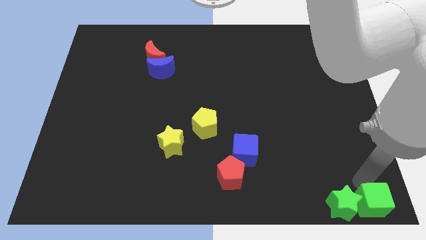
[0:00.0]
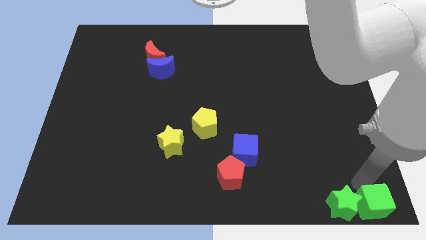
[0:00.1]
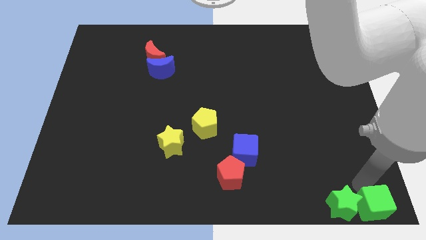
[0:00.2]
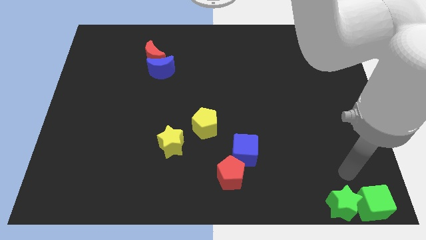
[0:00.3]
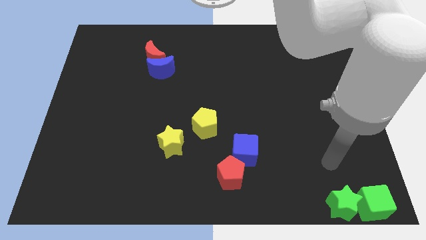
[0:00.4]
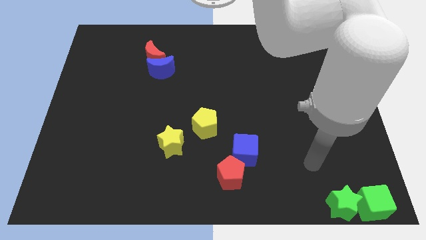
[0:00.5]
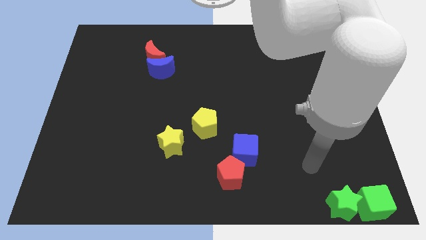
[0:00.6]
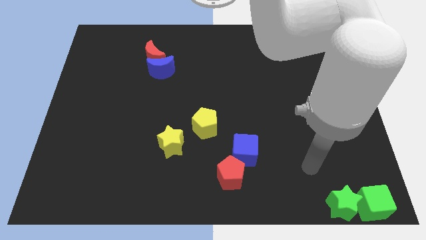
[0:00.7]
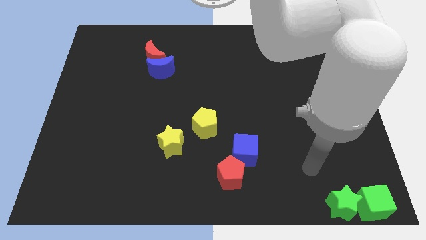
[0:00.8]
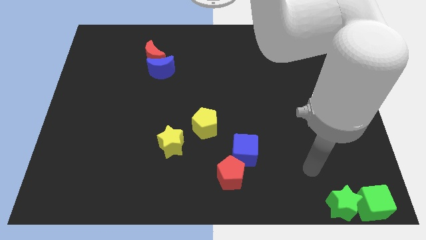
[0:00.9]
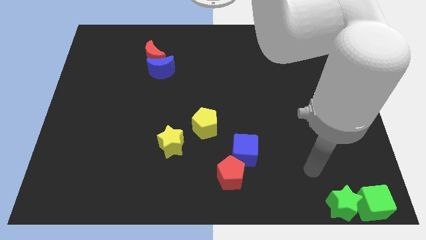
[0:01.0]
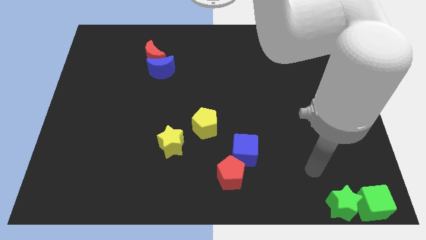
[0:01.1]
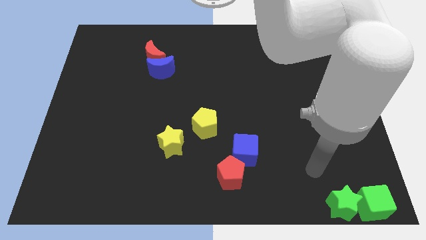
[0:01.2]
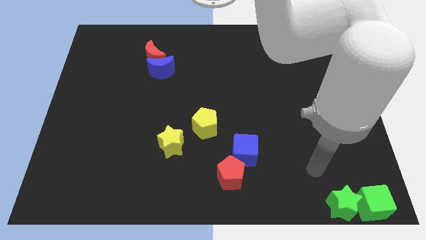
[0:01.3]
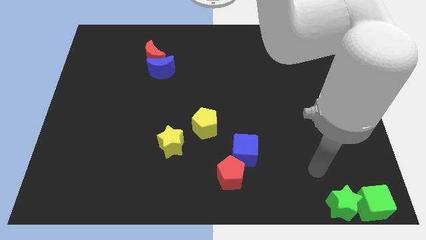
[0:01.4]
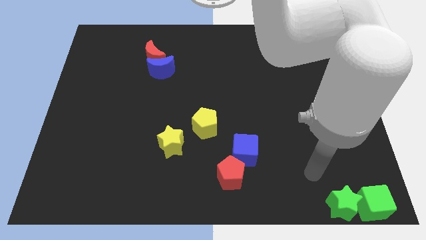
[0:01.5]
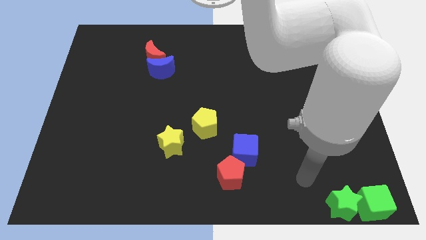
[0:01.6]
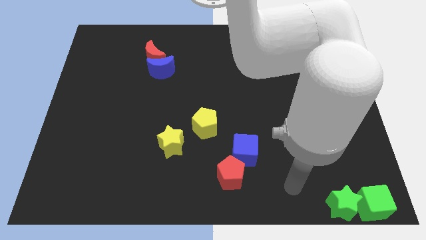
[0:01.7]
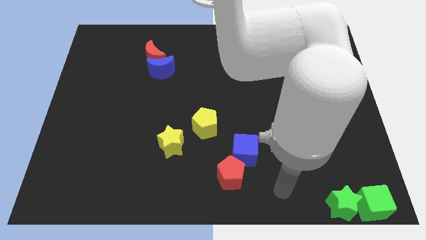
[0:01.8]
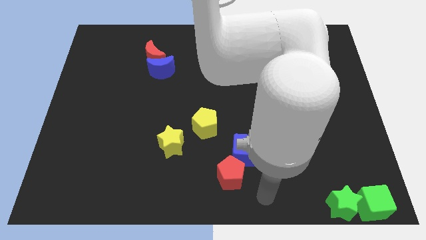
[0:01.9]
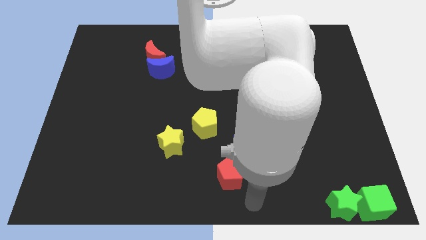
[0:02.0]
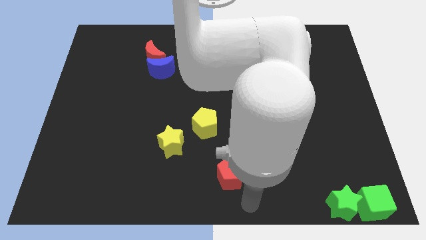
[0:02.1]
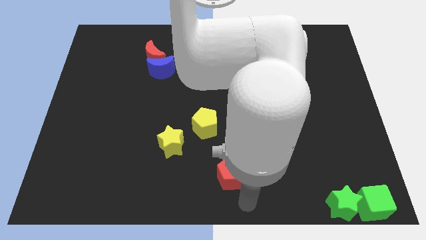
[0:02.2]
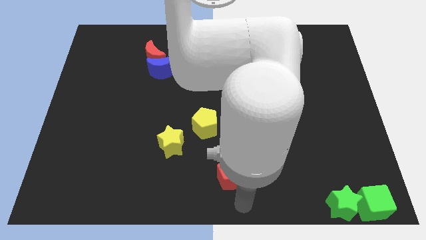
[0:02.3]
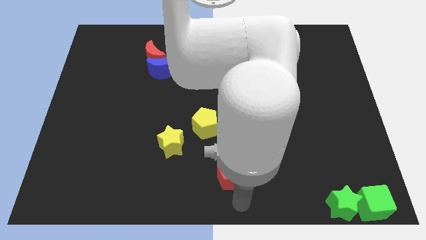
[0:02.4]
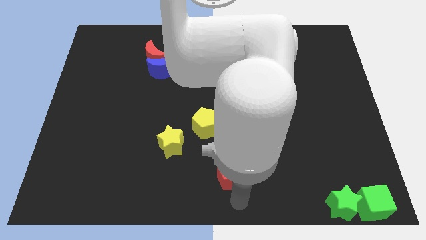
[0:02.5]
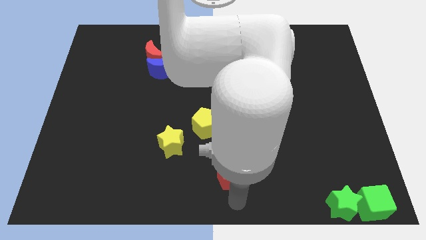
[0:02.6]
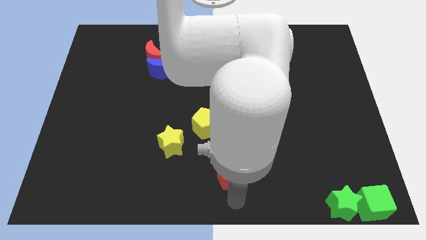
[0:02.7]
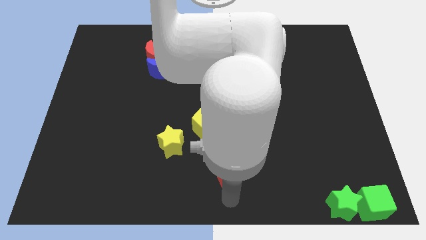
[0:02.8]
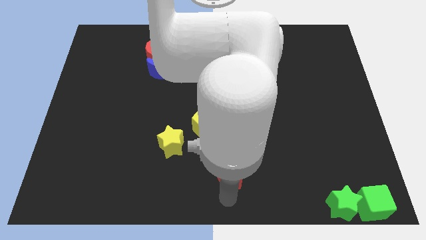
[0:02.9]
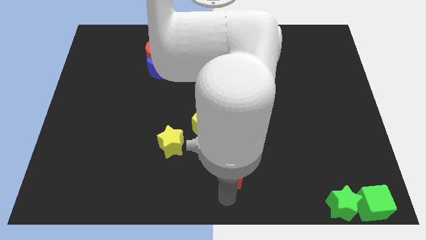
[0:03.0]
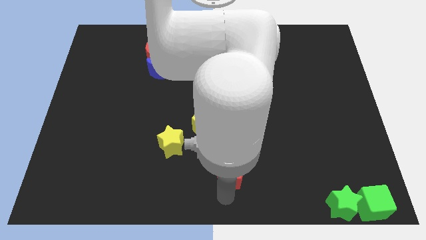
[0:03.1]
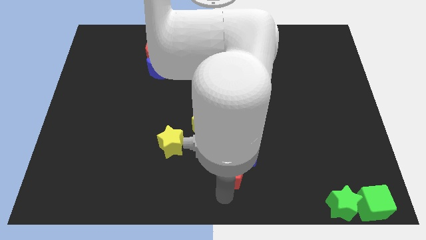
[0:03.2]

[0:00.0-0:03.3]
touch the bottom side of the red pentagon

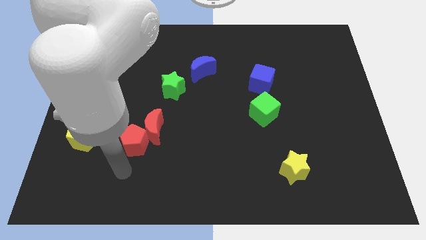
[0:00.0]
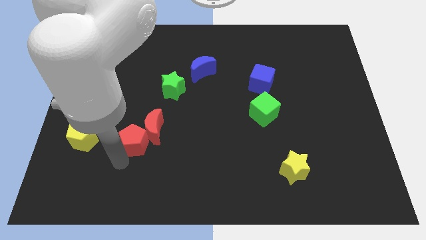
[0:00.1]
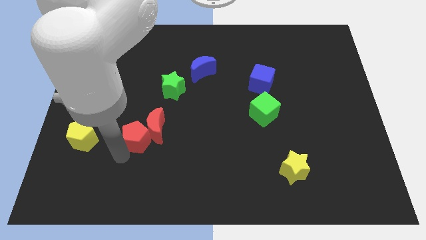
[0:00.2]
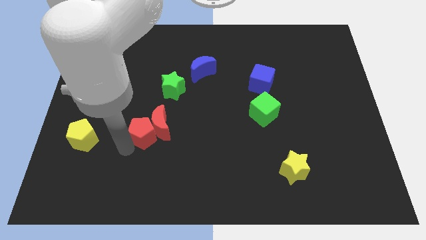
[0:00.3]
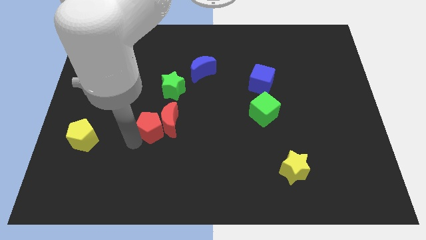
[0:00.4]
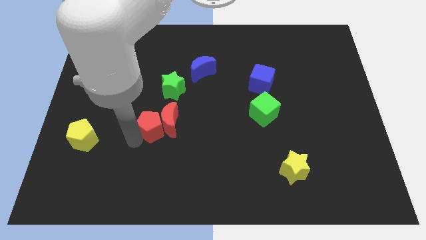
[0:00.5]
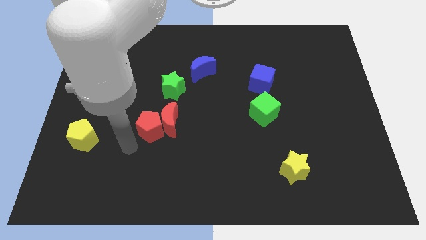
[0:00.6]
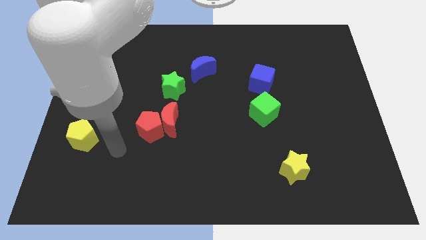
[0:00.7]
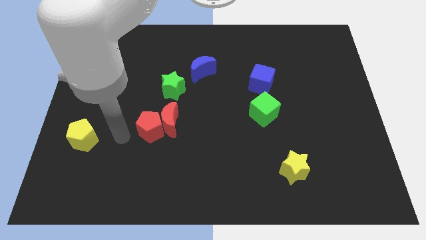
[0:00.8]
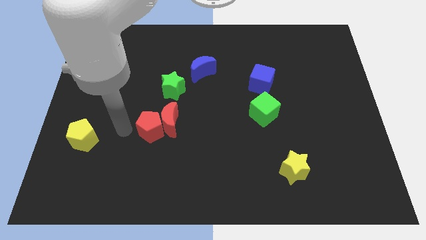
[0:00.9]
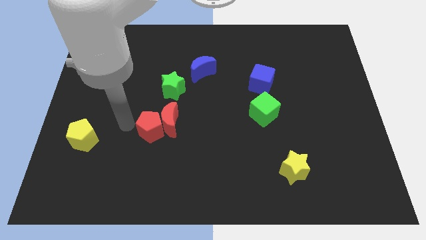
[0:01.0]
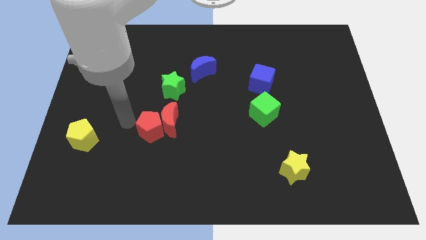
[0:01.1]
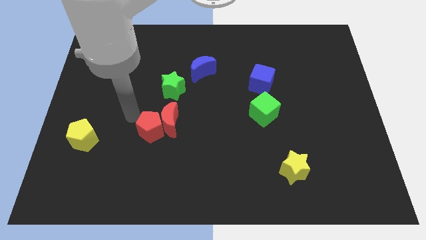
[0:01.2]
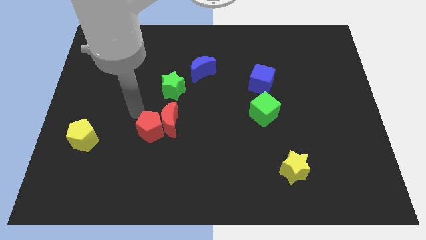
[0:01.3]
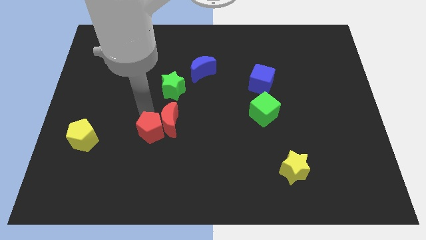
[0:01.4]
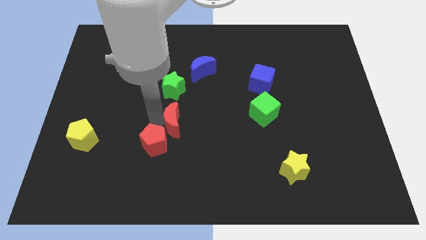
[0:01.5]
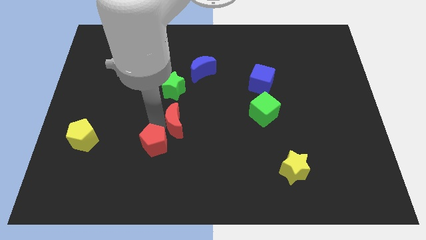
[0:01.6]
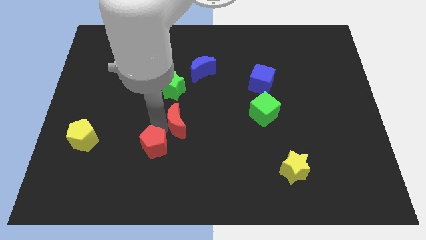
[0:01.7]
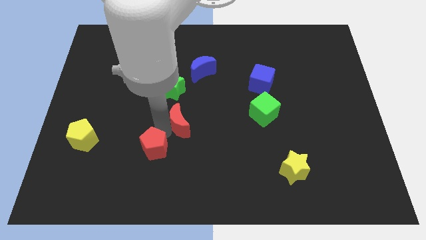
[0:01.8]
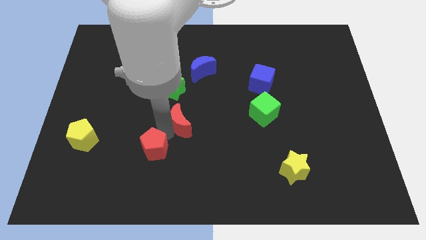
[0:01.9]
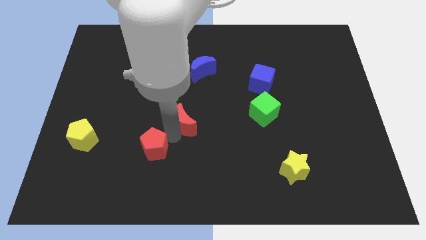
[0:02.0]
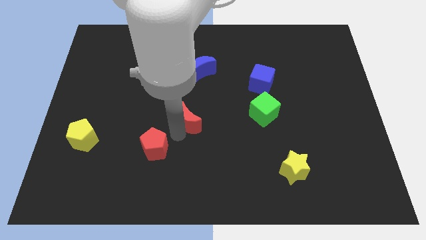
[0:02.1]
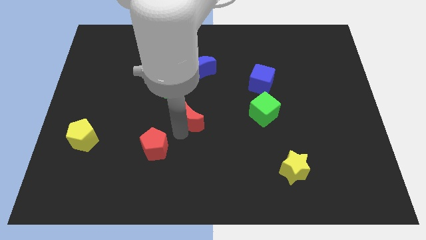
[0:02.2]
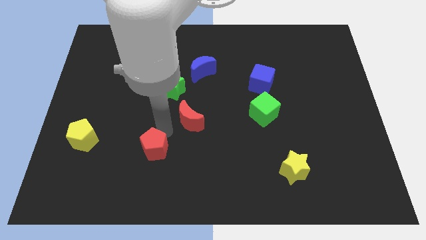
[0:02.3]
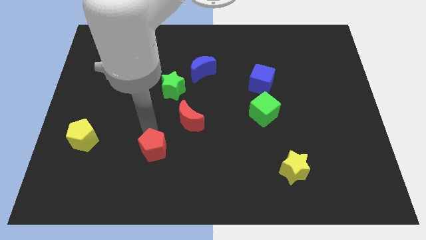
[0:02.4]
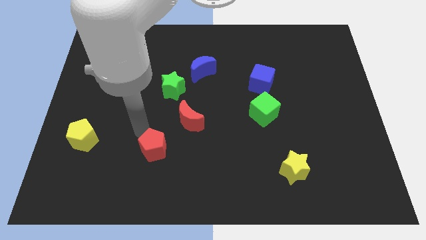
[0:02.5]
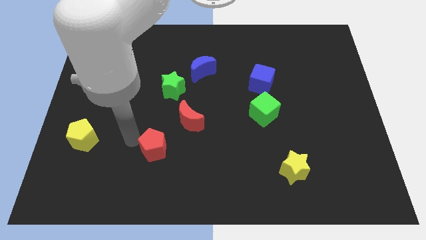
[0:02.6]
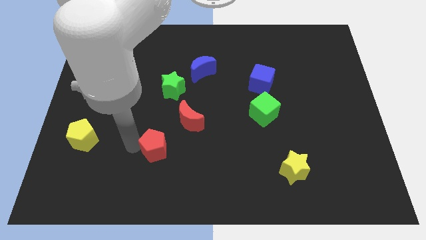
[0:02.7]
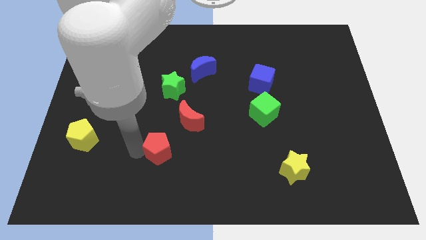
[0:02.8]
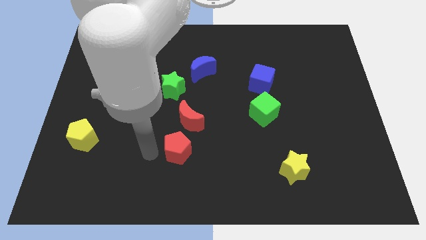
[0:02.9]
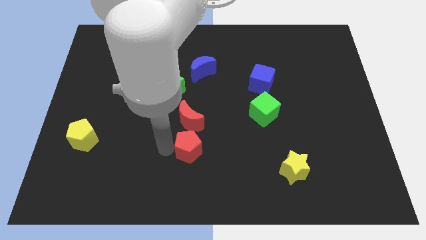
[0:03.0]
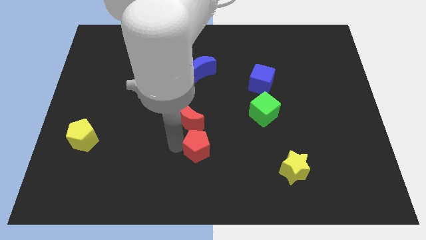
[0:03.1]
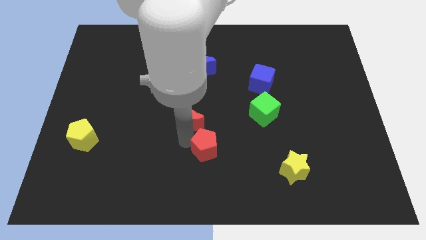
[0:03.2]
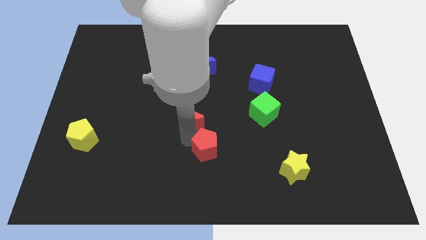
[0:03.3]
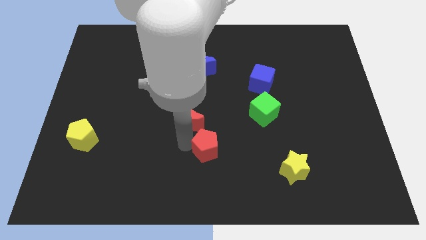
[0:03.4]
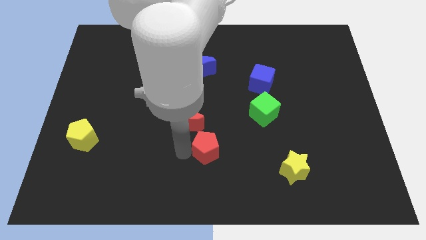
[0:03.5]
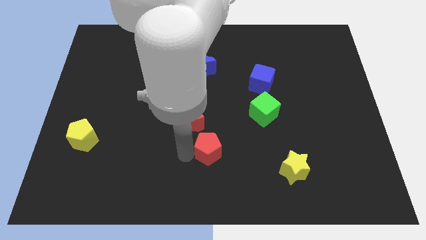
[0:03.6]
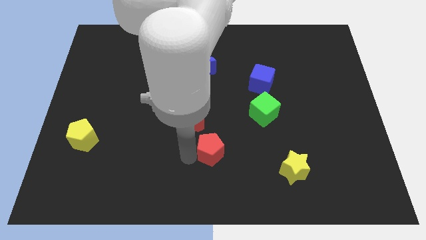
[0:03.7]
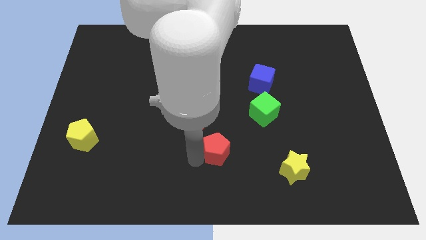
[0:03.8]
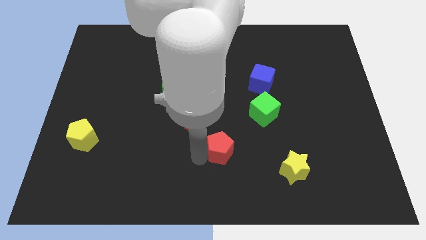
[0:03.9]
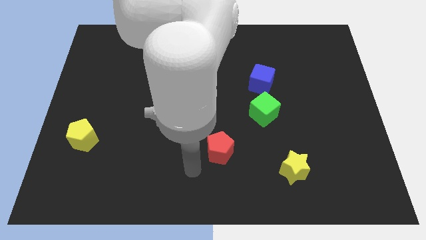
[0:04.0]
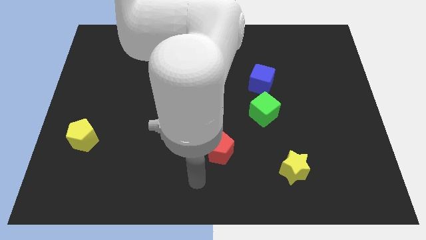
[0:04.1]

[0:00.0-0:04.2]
place the red blocks in between green star and yellow star

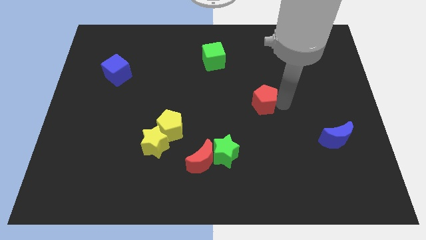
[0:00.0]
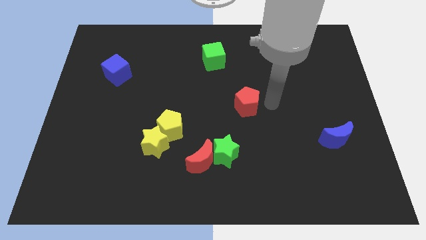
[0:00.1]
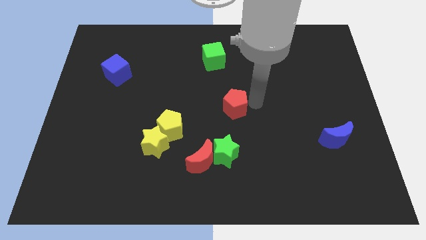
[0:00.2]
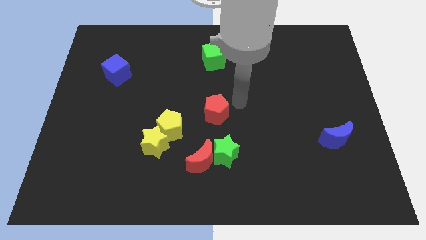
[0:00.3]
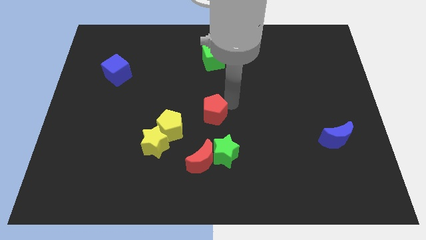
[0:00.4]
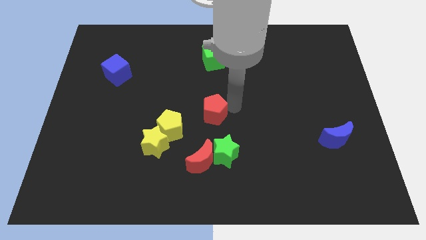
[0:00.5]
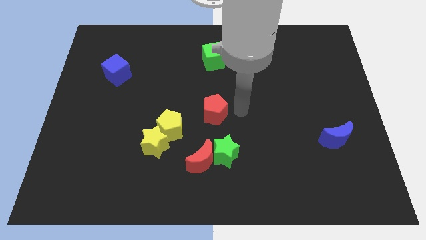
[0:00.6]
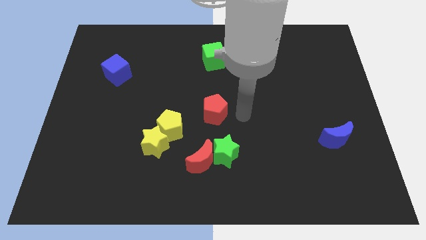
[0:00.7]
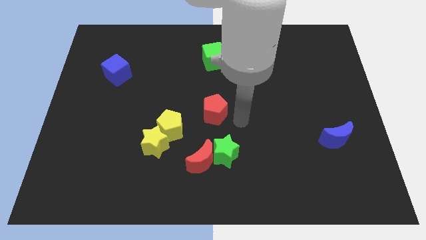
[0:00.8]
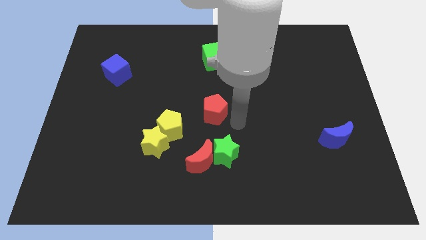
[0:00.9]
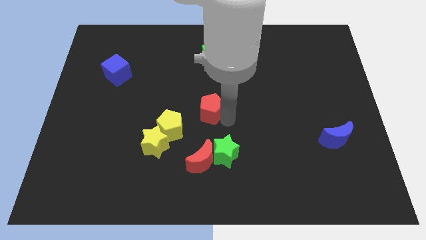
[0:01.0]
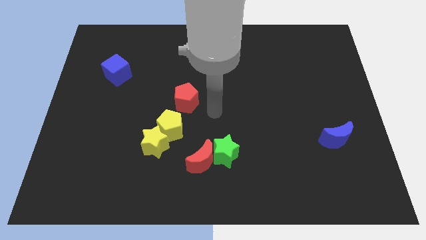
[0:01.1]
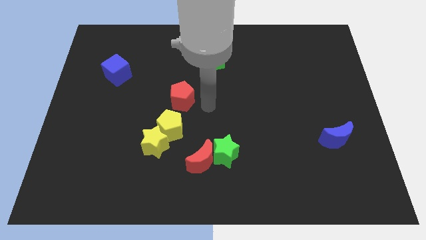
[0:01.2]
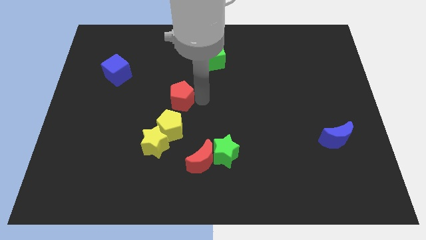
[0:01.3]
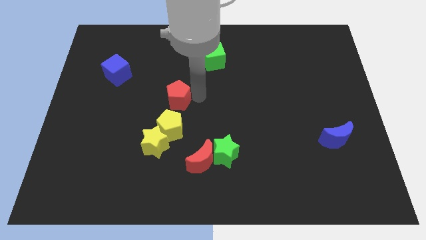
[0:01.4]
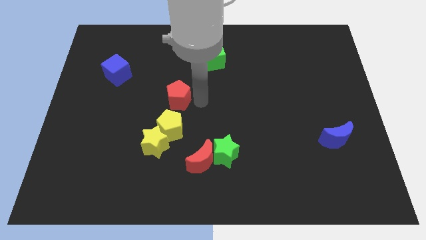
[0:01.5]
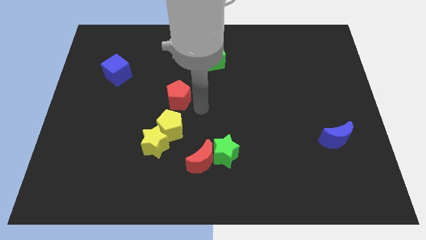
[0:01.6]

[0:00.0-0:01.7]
place the red pentagon in between green cube and yellow pentagon
